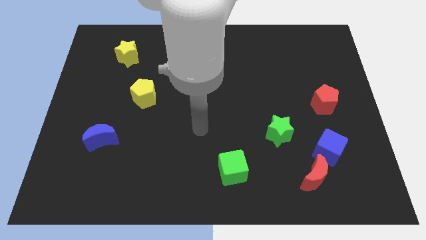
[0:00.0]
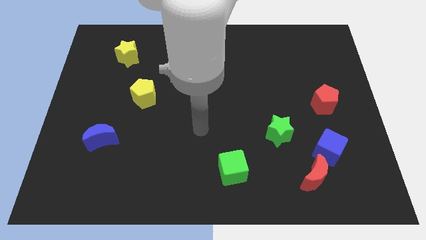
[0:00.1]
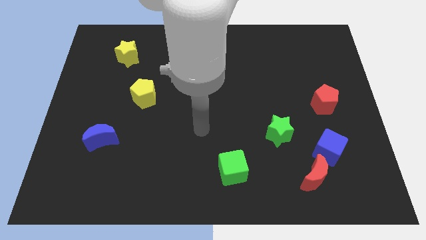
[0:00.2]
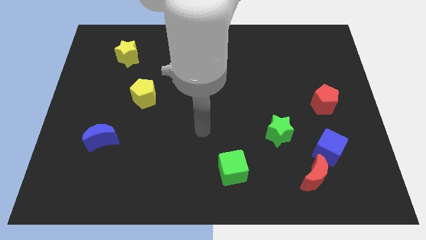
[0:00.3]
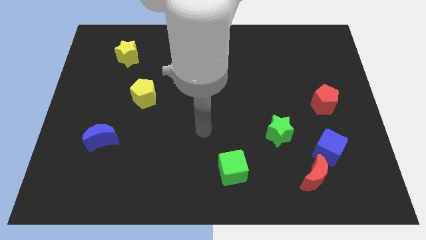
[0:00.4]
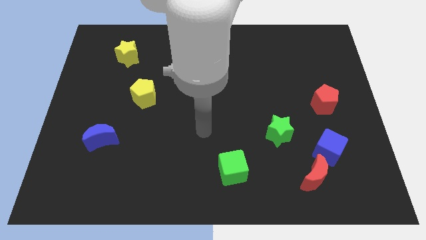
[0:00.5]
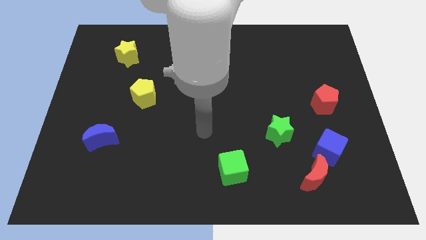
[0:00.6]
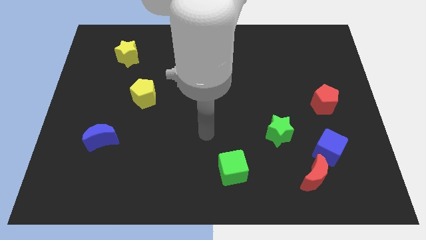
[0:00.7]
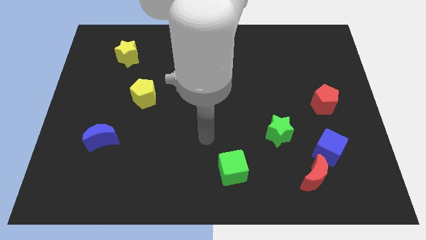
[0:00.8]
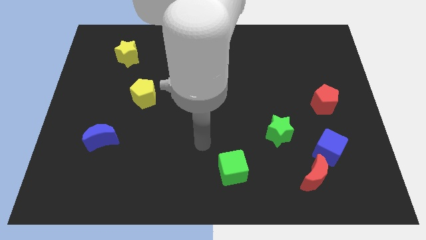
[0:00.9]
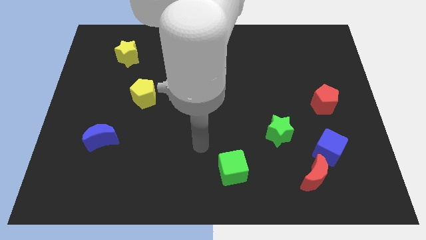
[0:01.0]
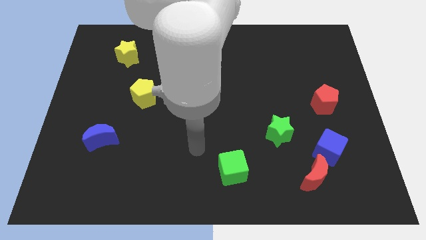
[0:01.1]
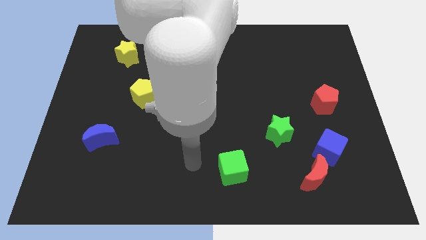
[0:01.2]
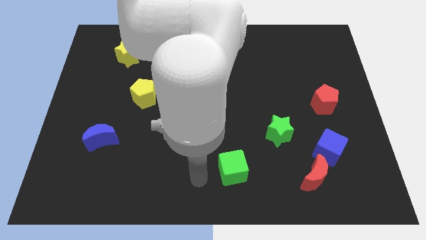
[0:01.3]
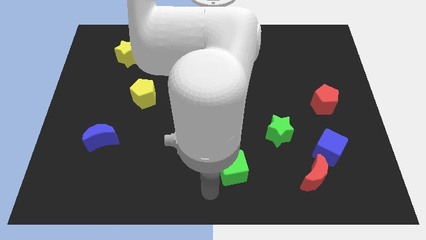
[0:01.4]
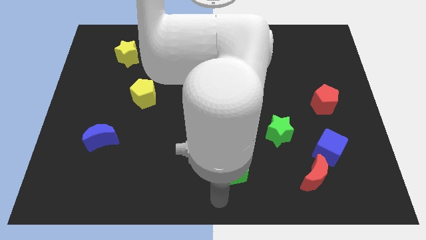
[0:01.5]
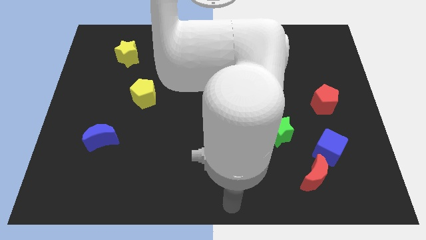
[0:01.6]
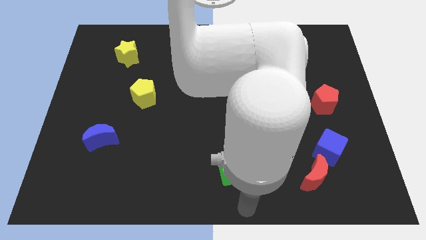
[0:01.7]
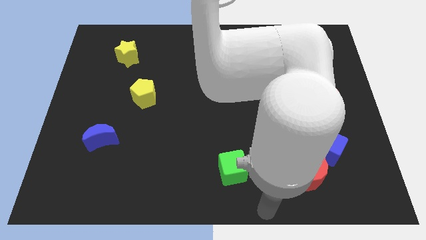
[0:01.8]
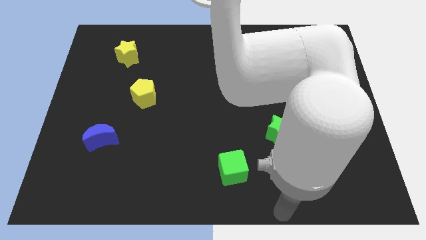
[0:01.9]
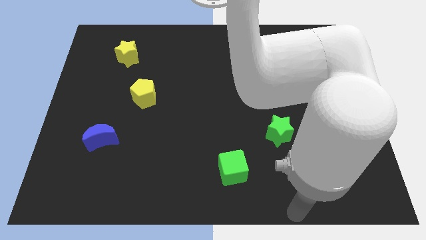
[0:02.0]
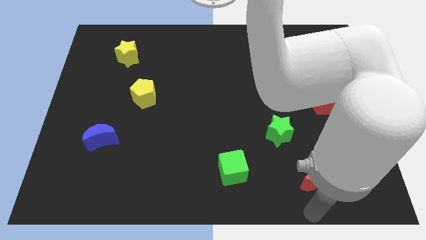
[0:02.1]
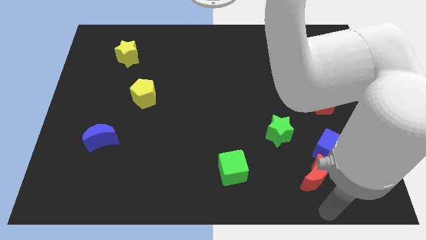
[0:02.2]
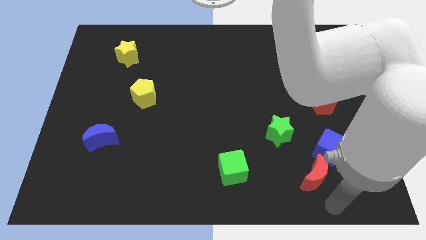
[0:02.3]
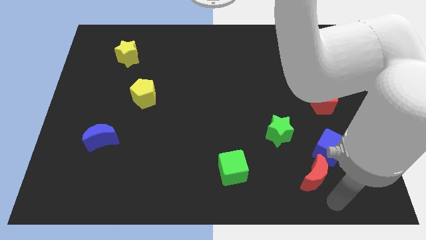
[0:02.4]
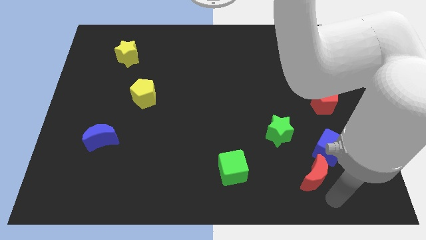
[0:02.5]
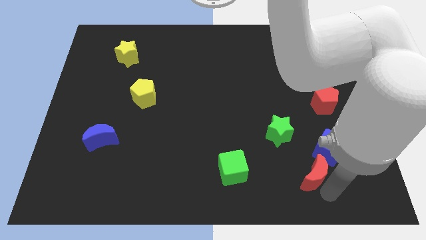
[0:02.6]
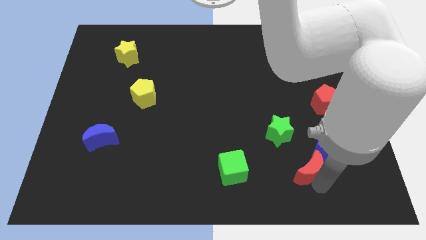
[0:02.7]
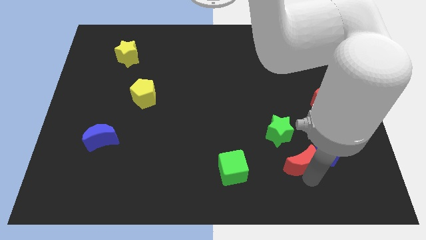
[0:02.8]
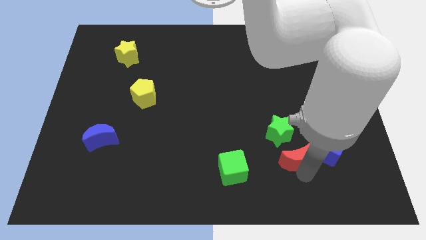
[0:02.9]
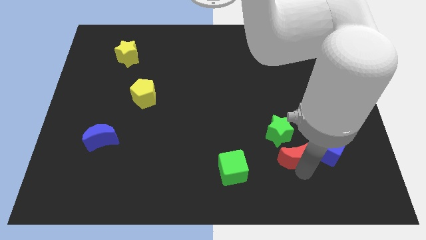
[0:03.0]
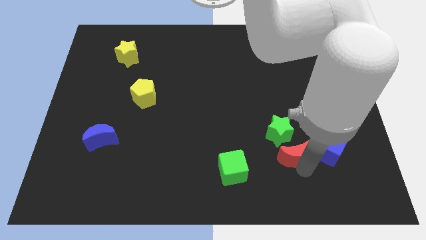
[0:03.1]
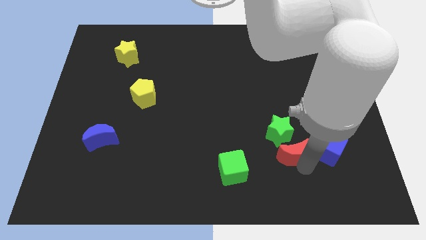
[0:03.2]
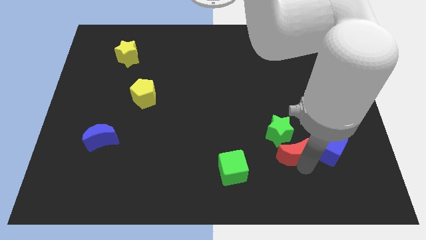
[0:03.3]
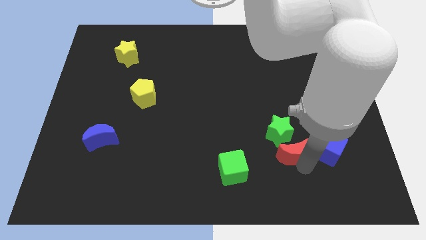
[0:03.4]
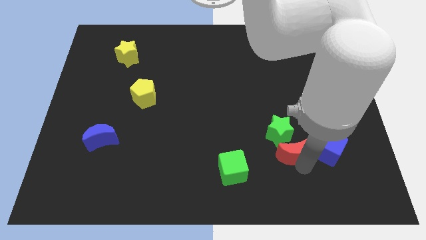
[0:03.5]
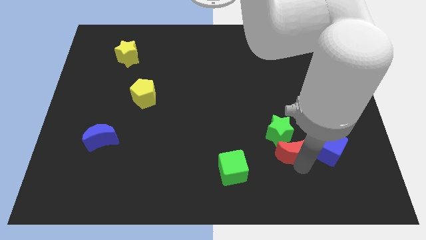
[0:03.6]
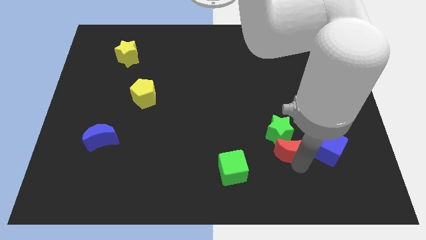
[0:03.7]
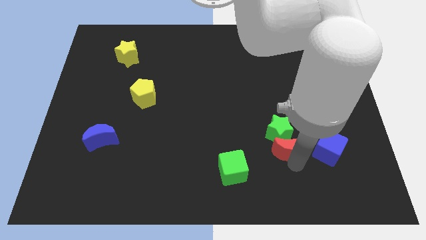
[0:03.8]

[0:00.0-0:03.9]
move the red crescent to the bottom of the green star

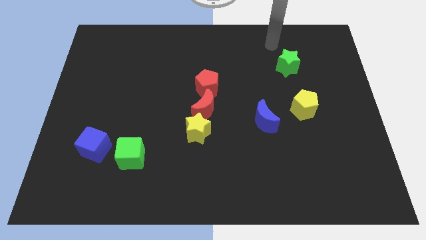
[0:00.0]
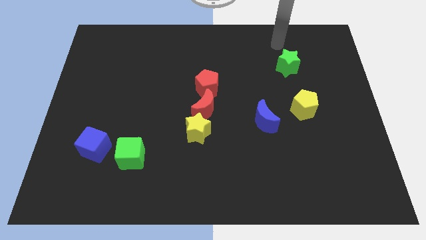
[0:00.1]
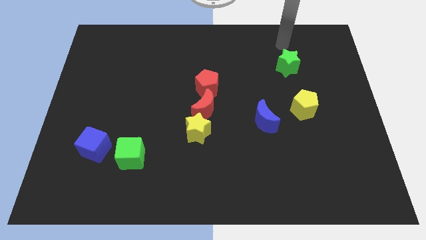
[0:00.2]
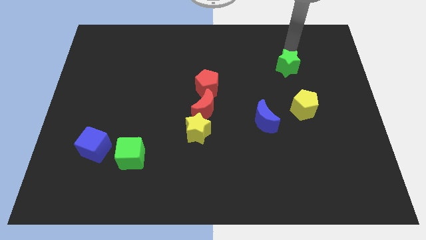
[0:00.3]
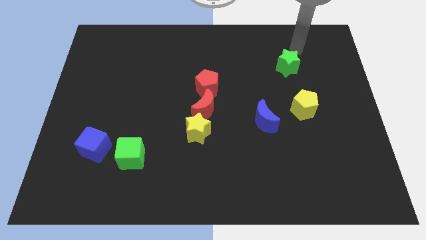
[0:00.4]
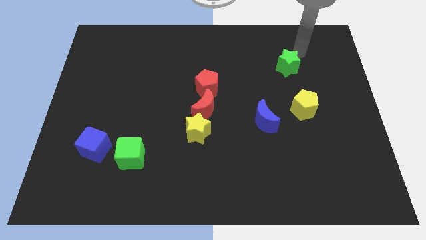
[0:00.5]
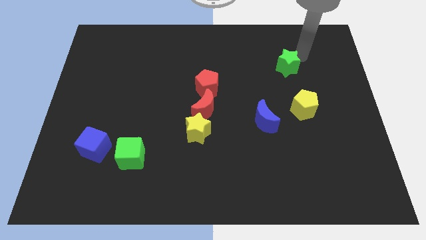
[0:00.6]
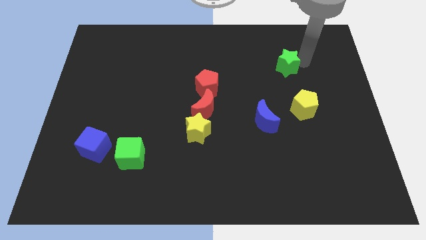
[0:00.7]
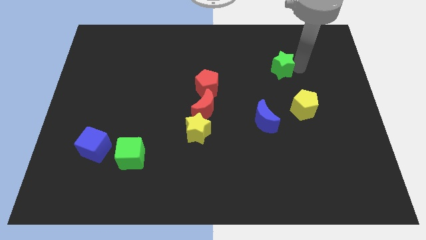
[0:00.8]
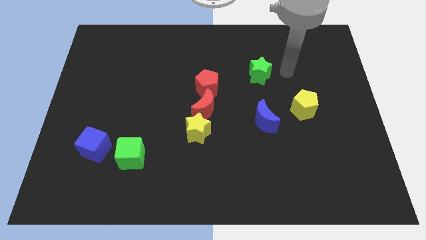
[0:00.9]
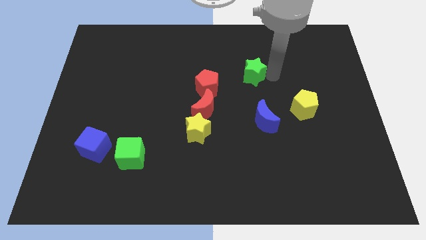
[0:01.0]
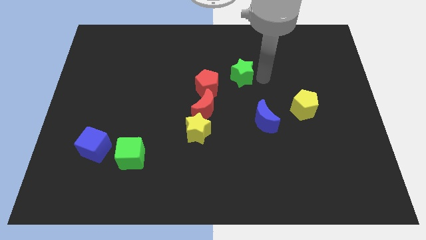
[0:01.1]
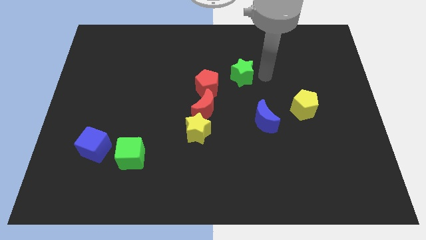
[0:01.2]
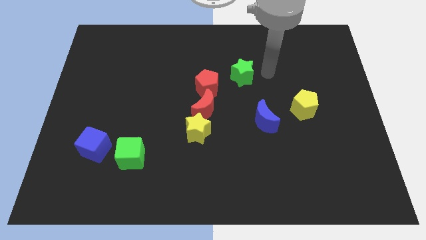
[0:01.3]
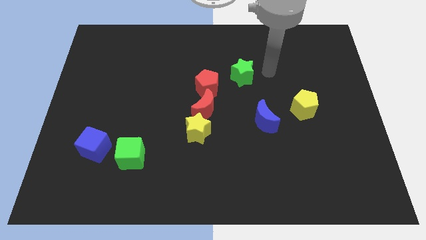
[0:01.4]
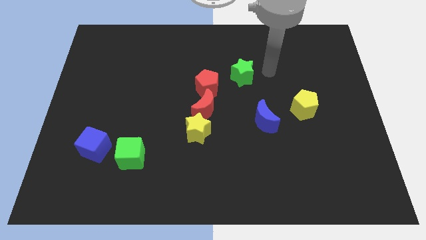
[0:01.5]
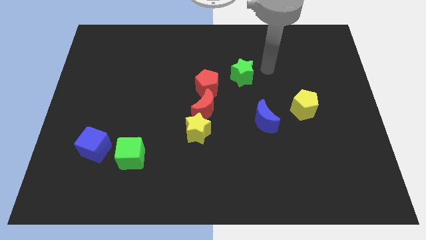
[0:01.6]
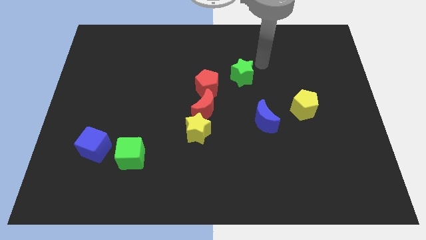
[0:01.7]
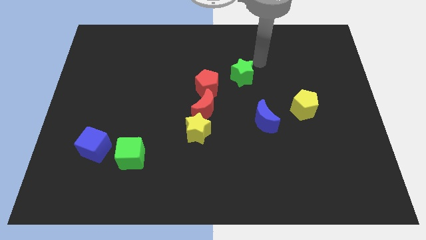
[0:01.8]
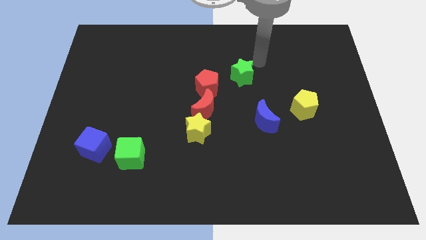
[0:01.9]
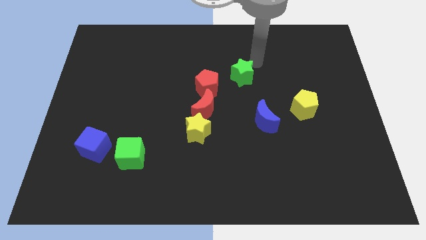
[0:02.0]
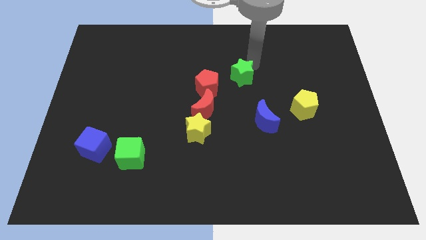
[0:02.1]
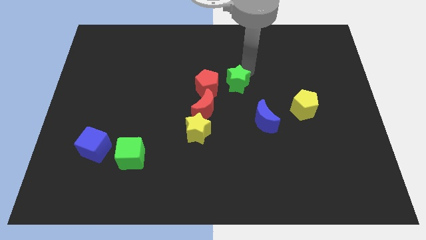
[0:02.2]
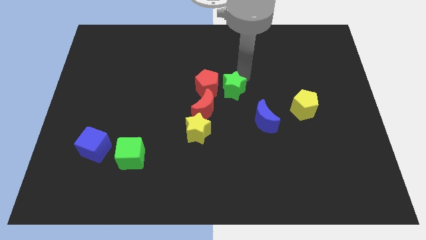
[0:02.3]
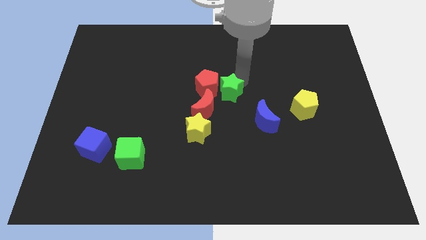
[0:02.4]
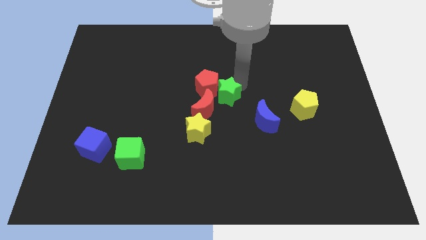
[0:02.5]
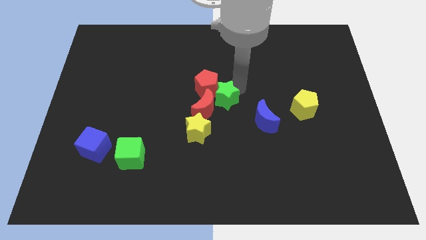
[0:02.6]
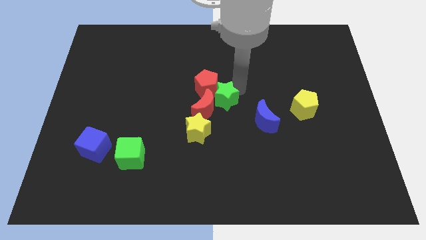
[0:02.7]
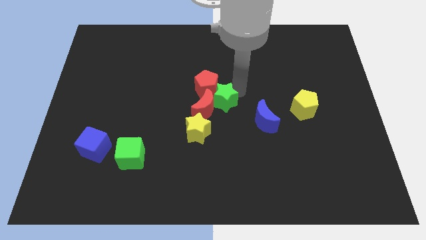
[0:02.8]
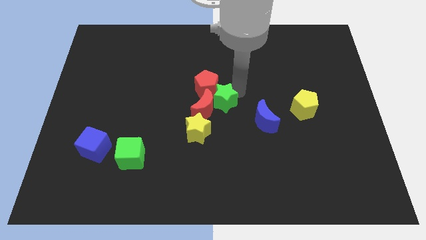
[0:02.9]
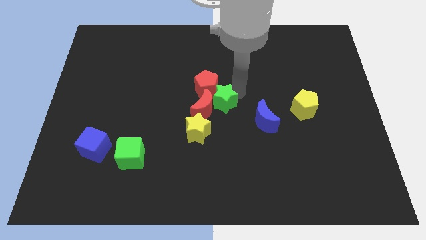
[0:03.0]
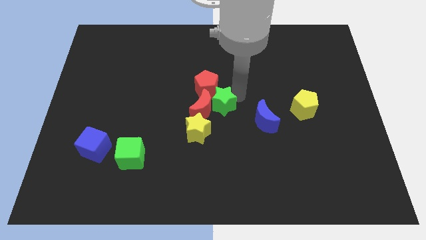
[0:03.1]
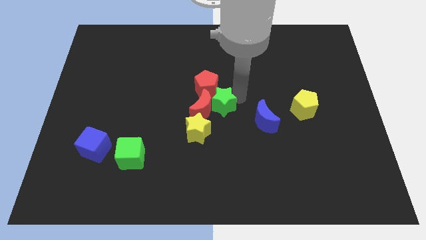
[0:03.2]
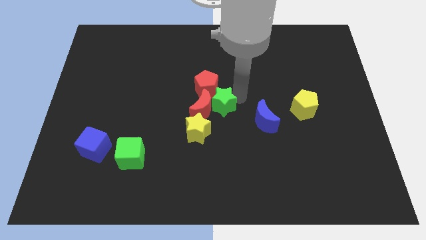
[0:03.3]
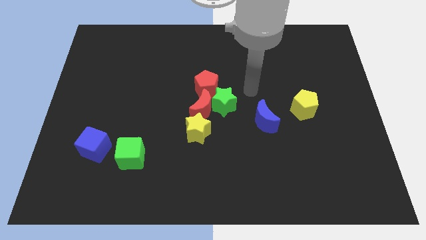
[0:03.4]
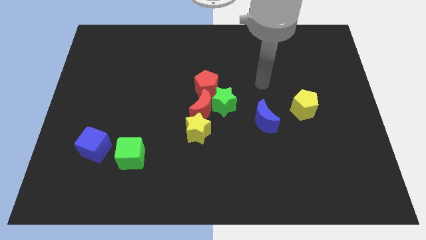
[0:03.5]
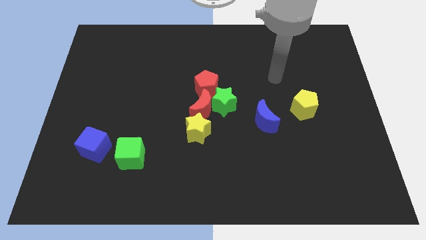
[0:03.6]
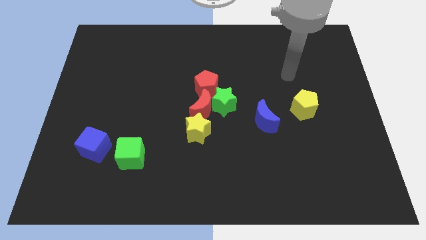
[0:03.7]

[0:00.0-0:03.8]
push the green star into the right side of the red moon

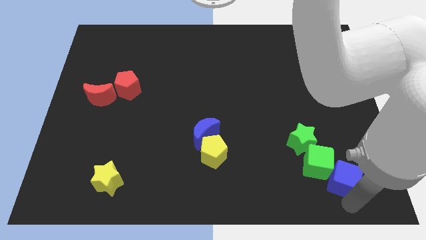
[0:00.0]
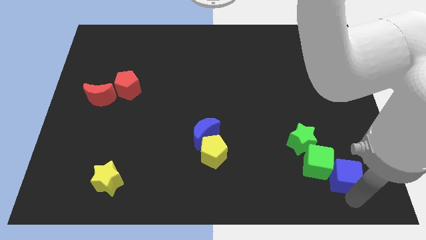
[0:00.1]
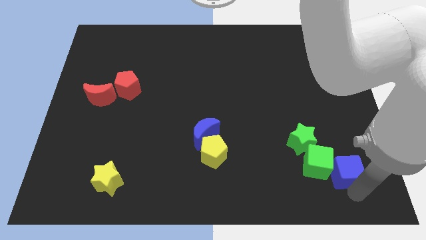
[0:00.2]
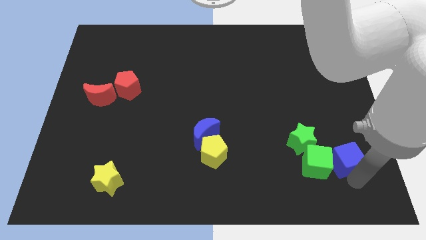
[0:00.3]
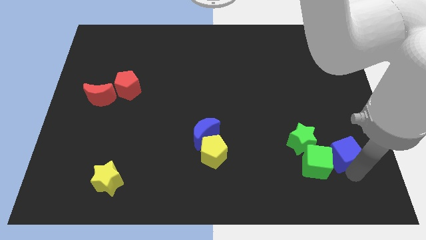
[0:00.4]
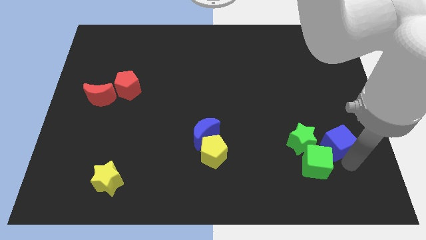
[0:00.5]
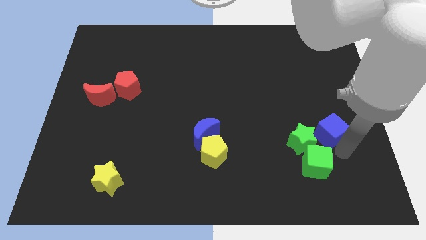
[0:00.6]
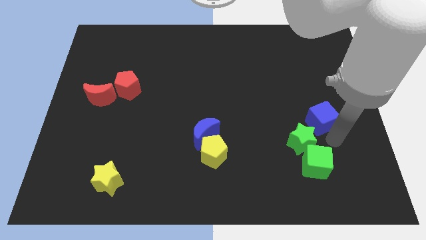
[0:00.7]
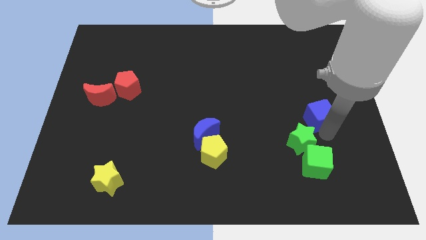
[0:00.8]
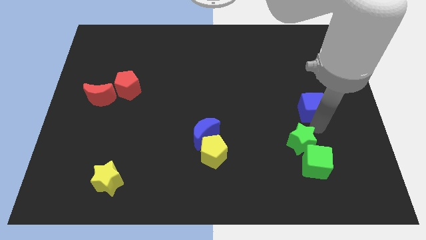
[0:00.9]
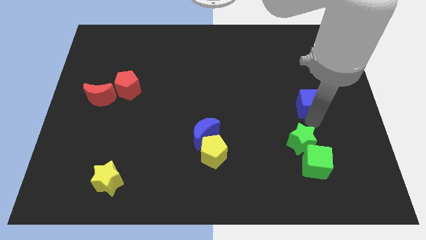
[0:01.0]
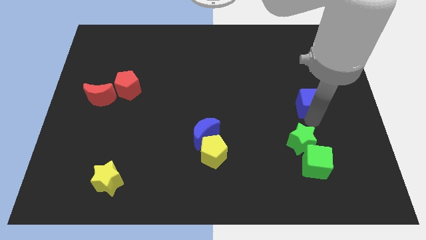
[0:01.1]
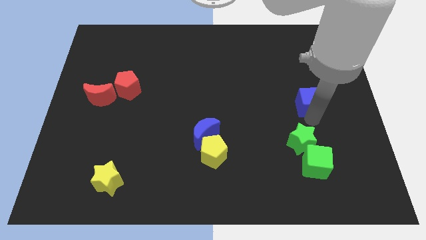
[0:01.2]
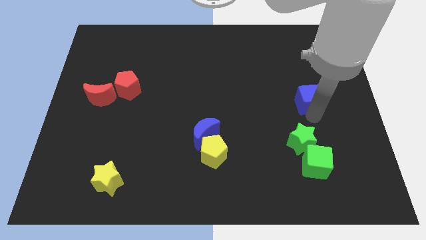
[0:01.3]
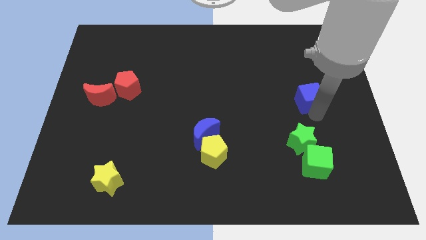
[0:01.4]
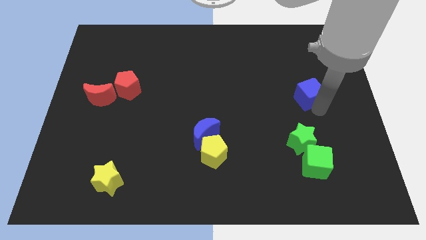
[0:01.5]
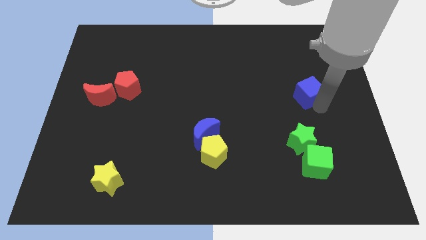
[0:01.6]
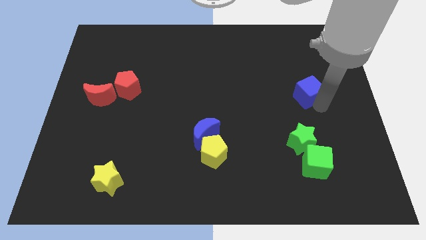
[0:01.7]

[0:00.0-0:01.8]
place the blue cube diagonally to the top right of the green star
